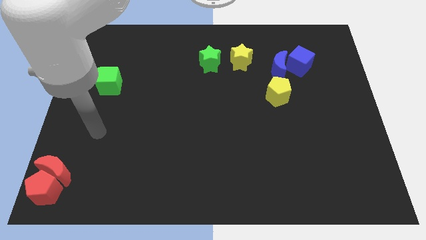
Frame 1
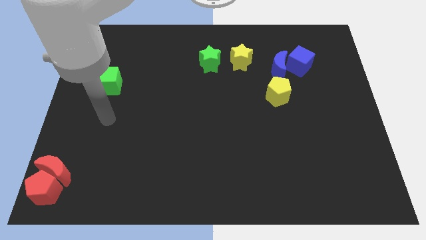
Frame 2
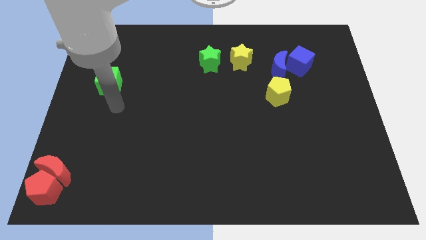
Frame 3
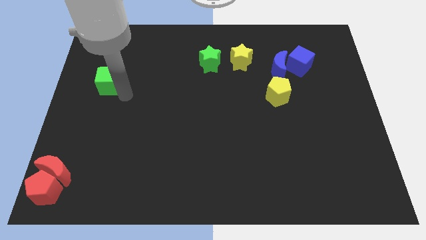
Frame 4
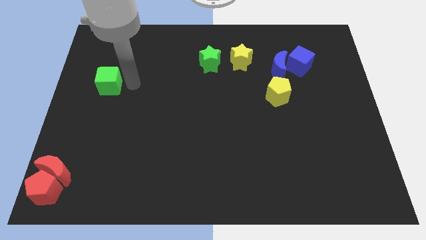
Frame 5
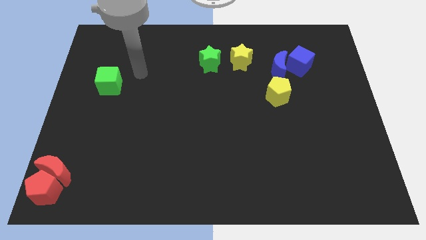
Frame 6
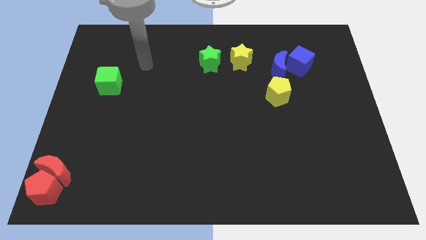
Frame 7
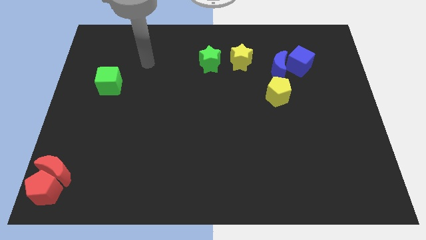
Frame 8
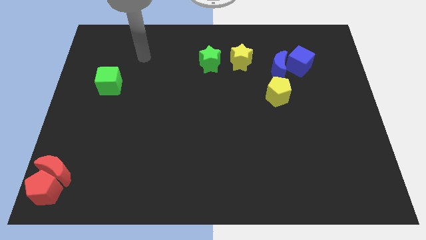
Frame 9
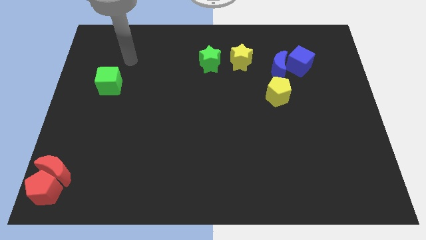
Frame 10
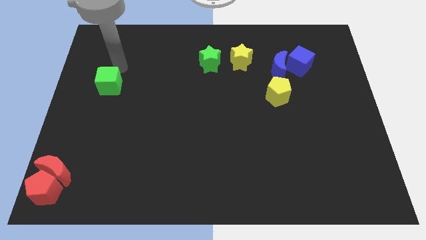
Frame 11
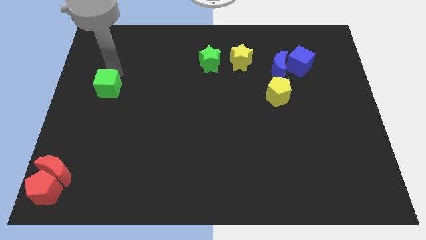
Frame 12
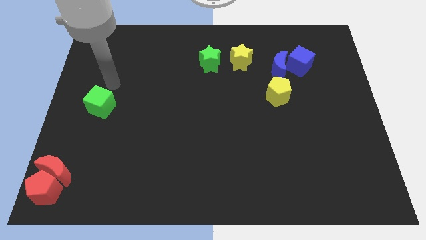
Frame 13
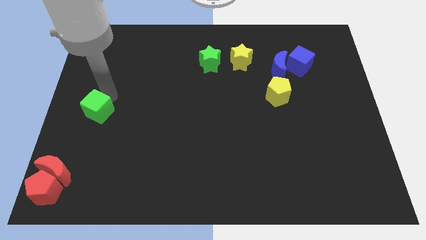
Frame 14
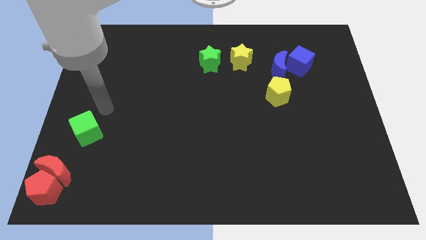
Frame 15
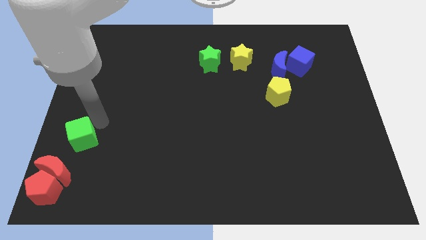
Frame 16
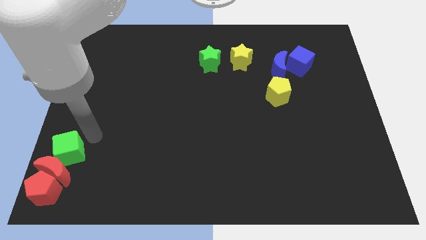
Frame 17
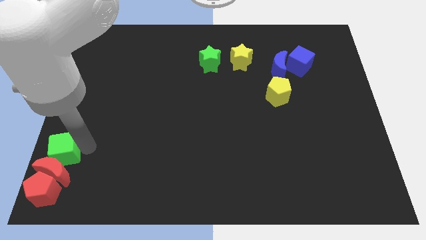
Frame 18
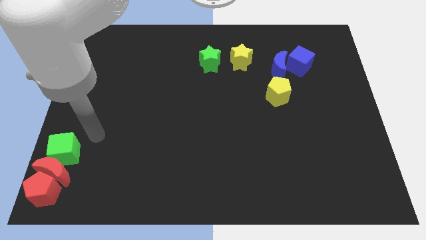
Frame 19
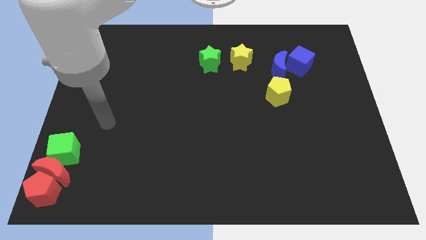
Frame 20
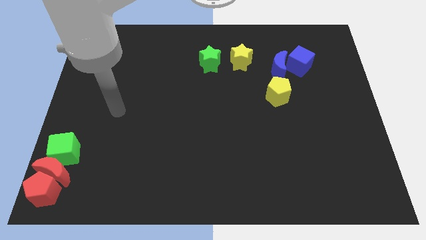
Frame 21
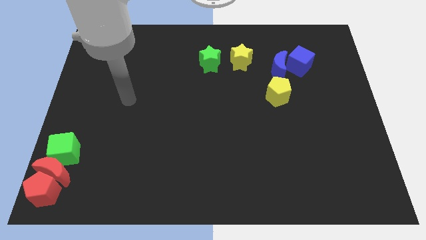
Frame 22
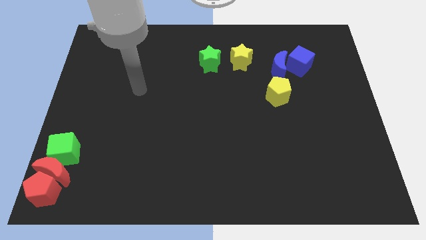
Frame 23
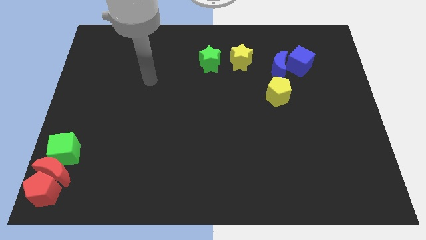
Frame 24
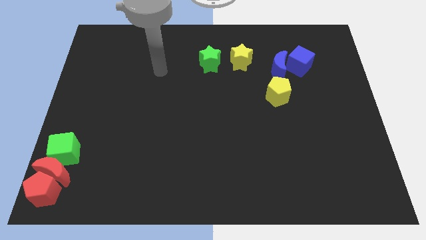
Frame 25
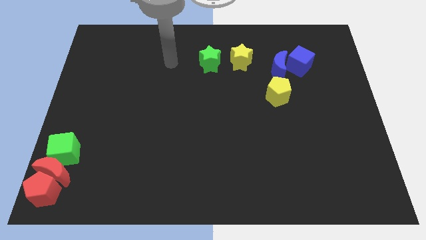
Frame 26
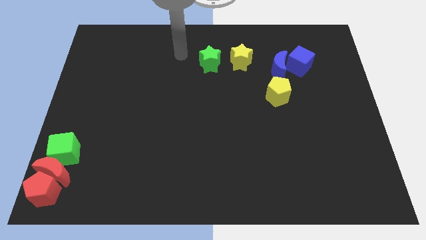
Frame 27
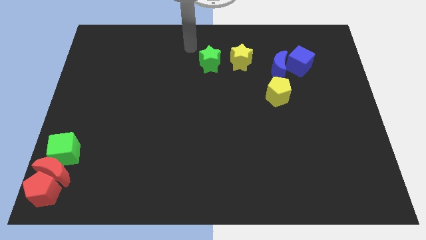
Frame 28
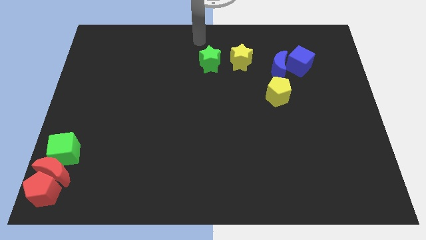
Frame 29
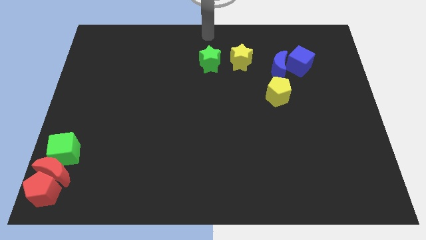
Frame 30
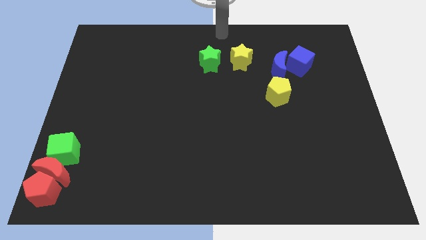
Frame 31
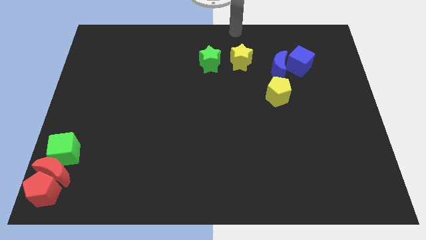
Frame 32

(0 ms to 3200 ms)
put the green cube vertically above the red moon

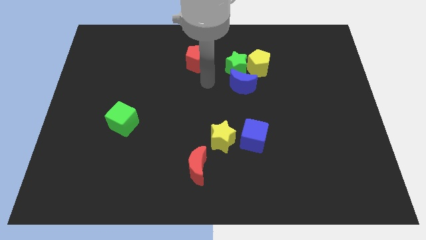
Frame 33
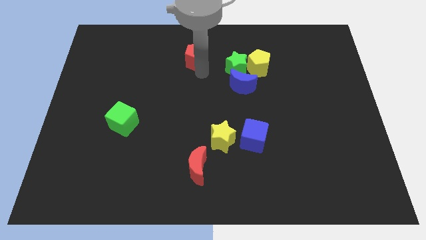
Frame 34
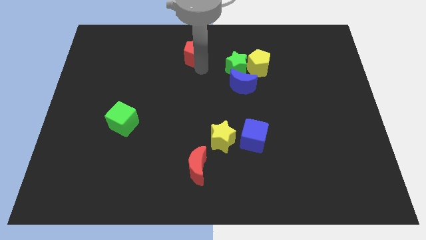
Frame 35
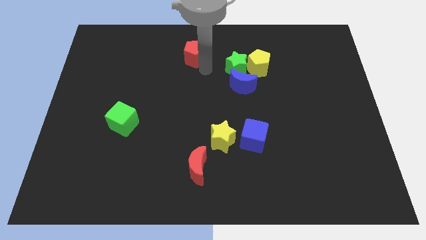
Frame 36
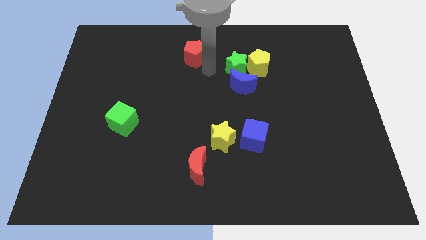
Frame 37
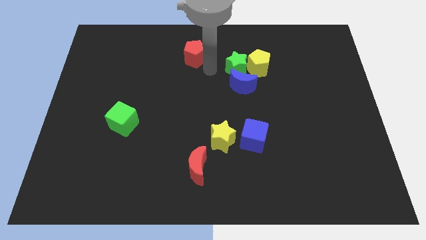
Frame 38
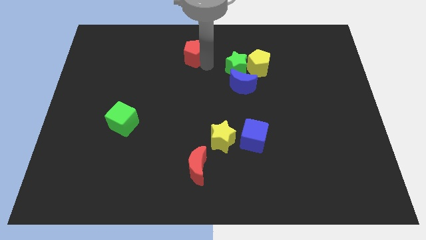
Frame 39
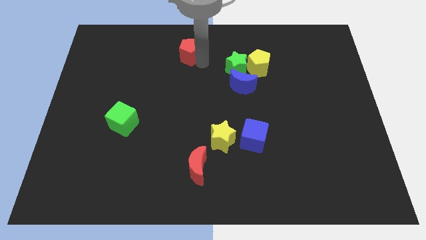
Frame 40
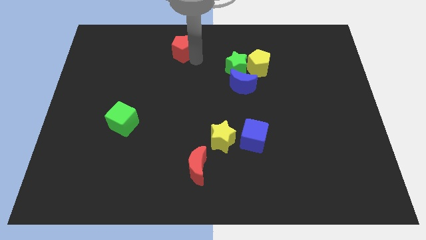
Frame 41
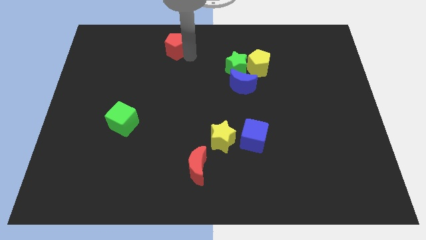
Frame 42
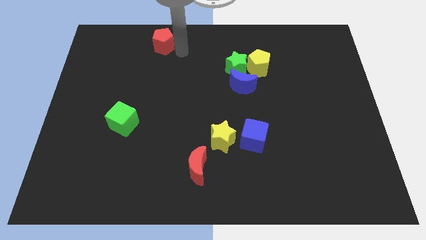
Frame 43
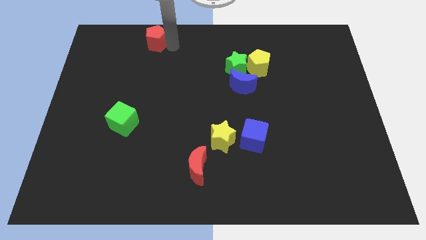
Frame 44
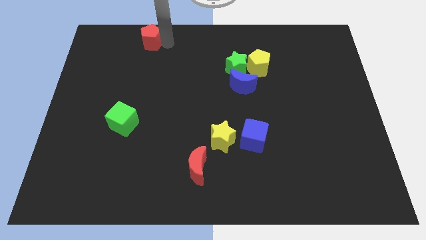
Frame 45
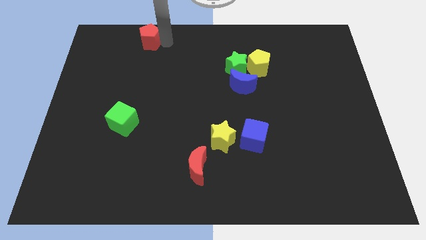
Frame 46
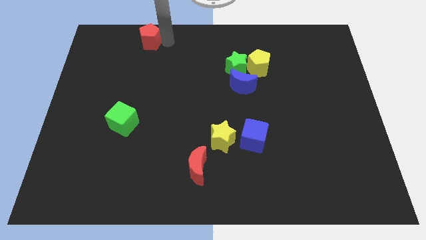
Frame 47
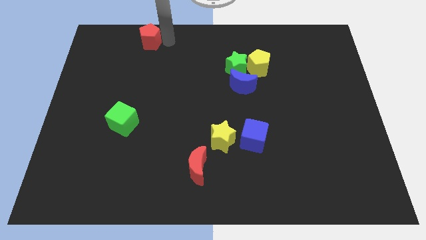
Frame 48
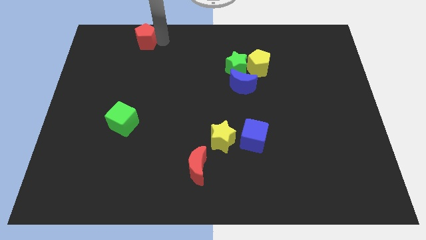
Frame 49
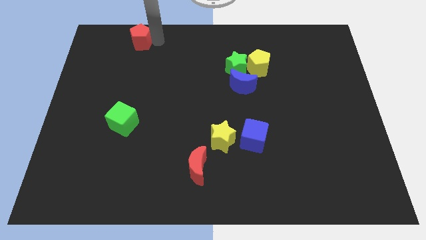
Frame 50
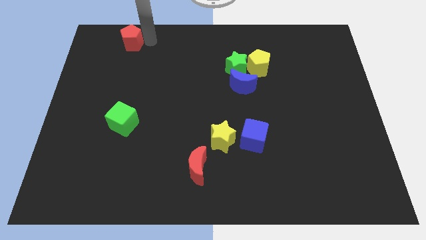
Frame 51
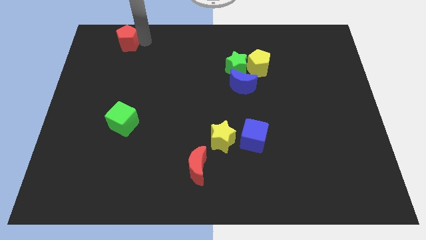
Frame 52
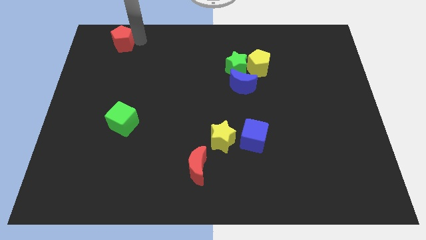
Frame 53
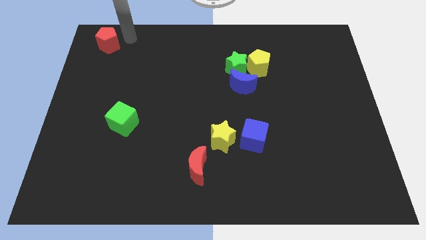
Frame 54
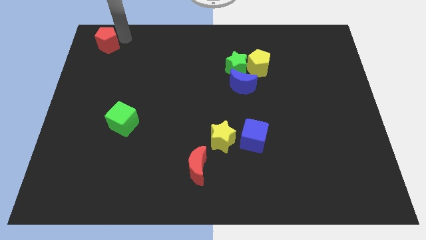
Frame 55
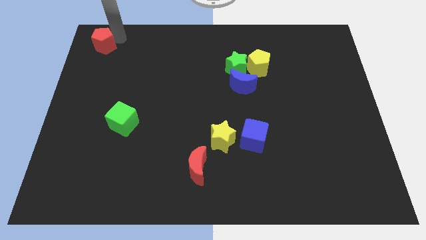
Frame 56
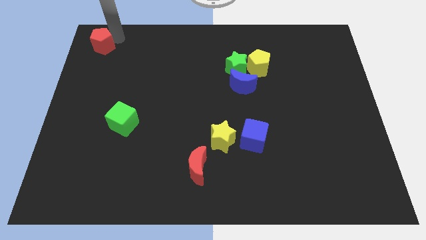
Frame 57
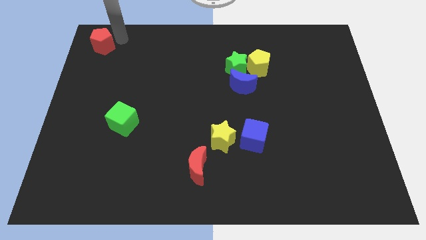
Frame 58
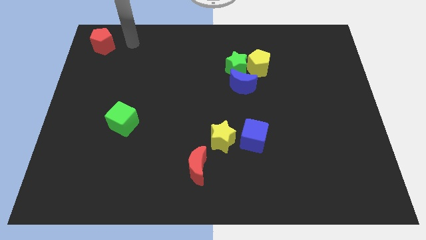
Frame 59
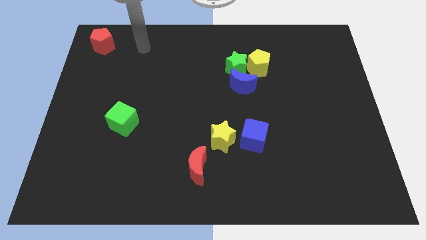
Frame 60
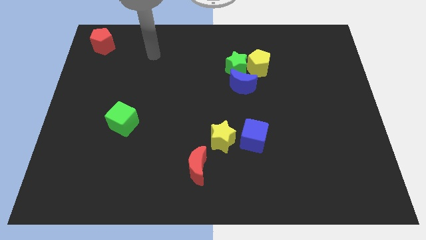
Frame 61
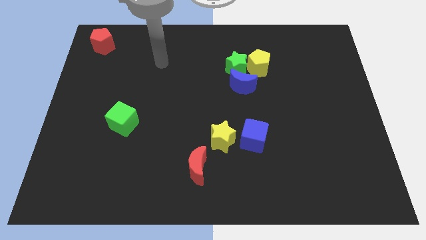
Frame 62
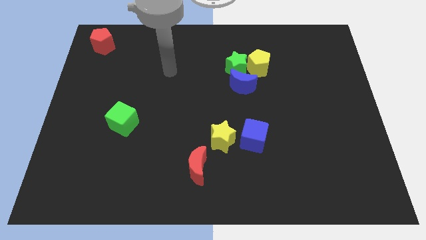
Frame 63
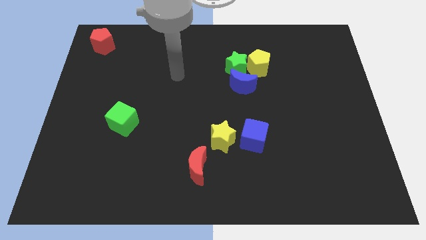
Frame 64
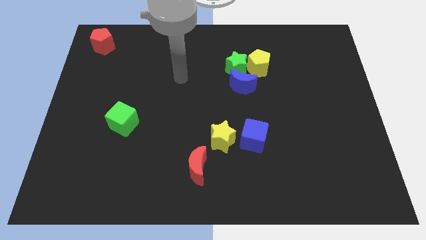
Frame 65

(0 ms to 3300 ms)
move the red pentagon towards the top left side

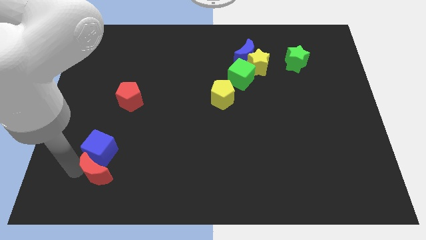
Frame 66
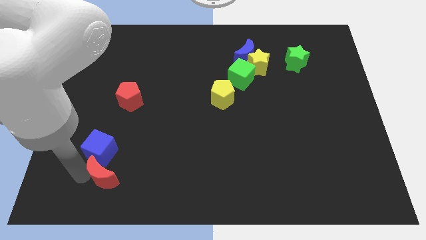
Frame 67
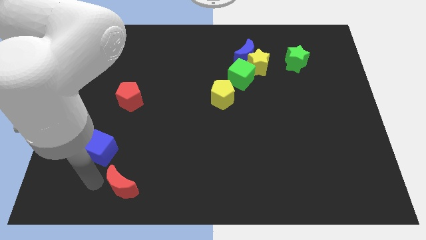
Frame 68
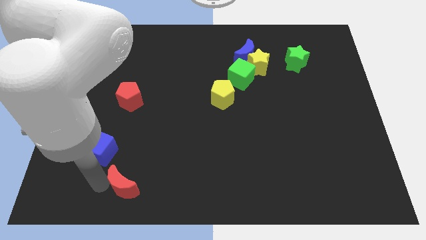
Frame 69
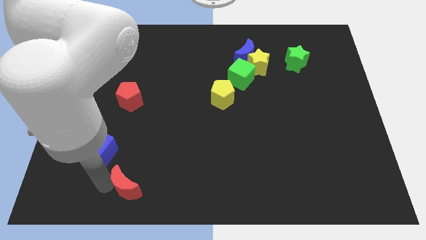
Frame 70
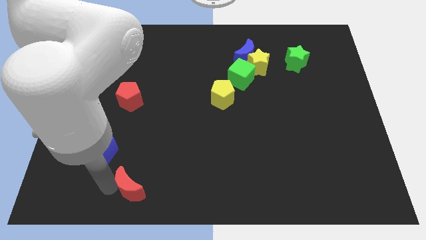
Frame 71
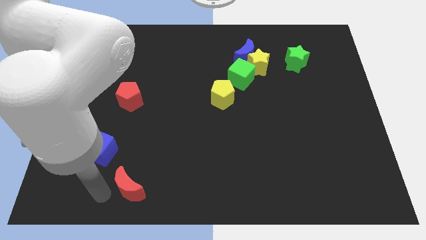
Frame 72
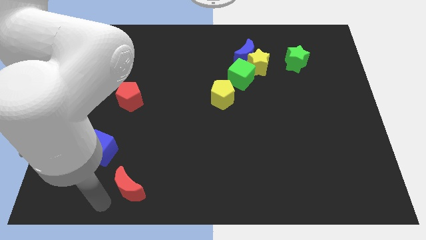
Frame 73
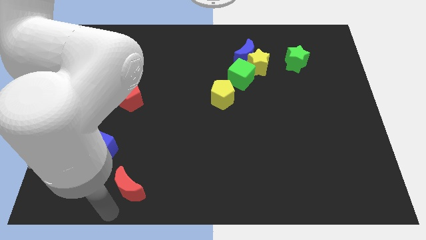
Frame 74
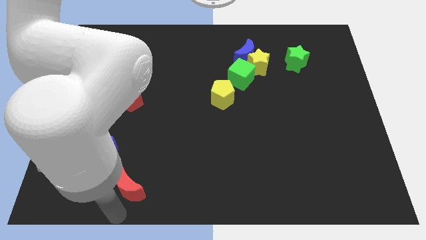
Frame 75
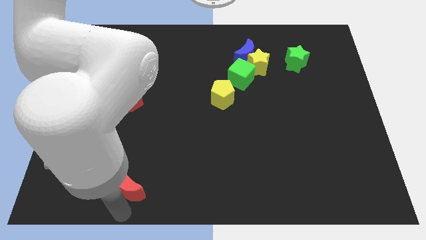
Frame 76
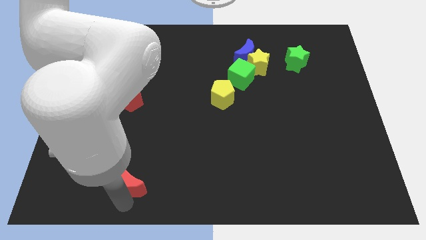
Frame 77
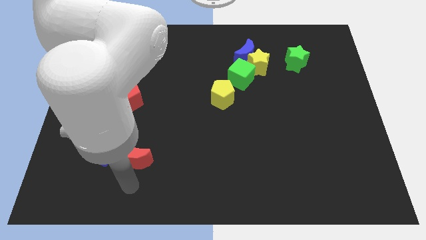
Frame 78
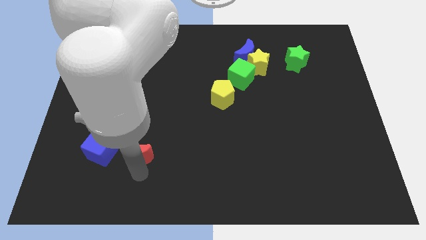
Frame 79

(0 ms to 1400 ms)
move red crescent slightly right side

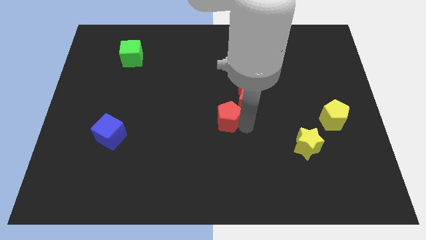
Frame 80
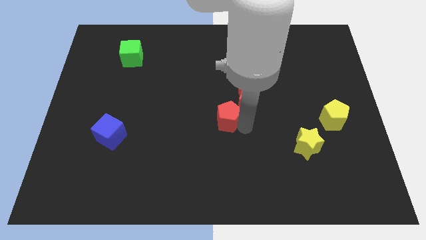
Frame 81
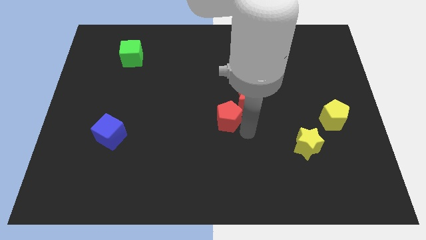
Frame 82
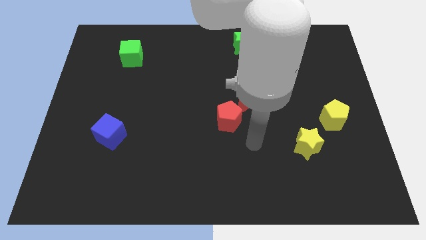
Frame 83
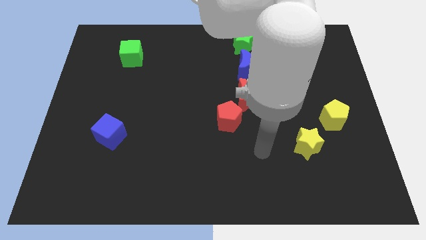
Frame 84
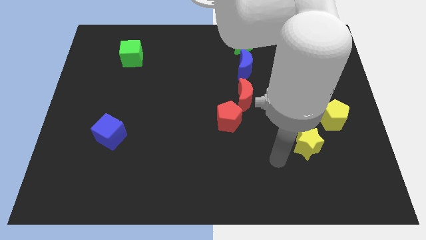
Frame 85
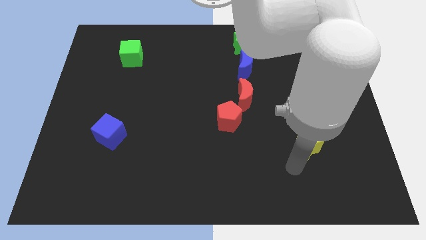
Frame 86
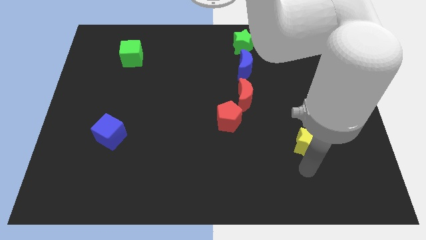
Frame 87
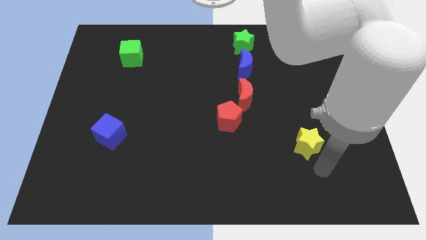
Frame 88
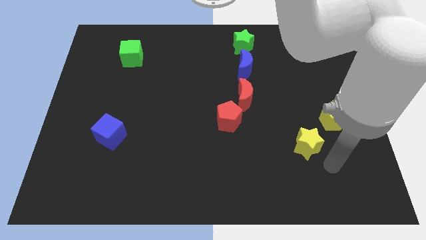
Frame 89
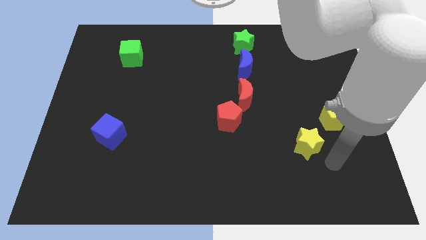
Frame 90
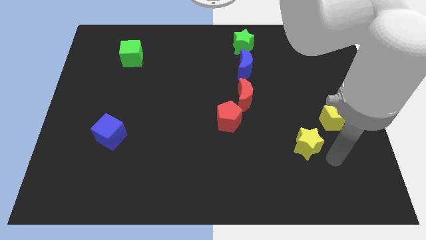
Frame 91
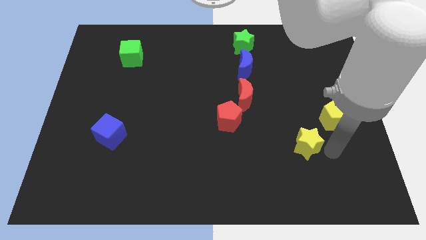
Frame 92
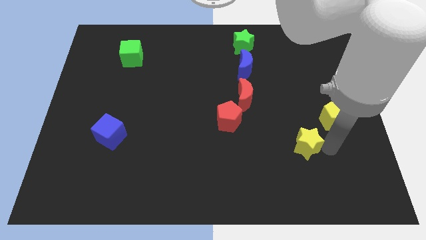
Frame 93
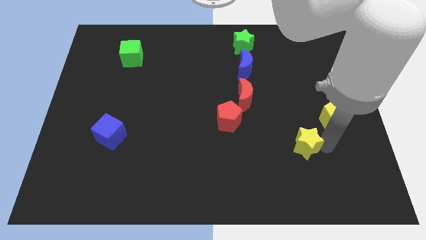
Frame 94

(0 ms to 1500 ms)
move your arm away from the red pentagon
